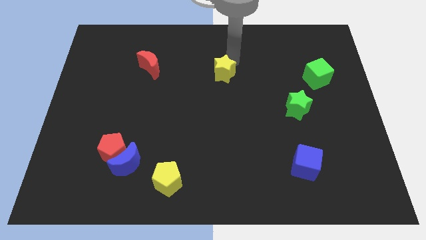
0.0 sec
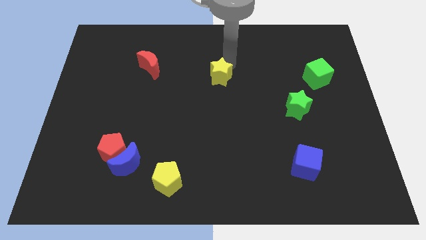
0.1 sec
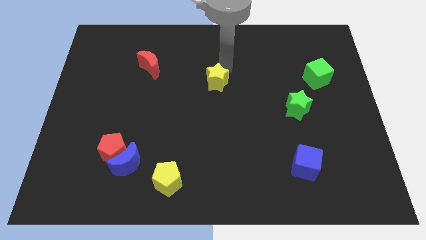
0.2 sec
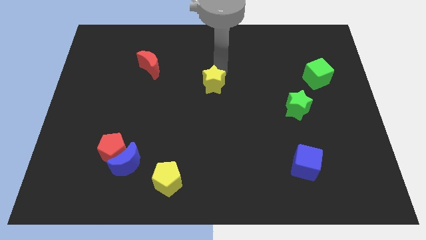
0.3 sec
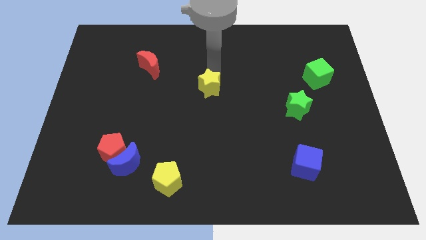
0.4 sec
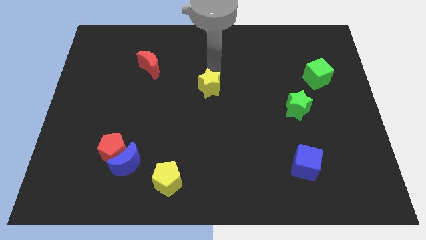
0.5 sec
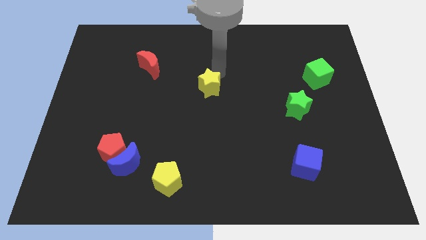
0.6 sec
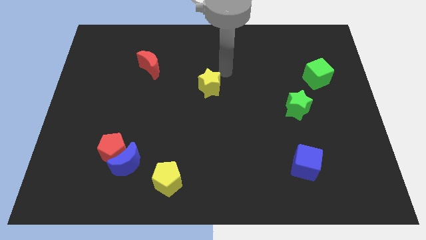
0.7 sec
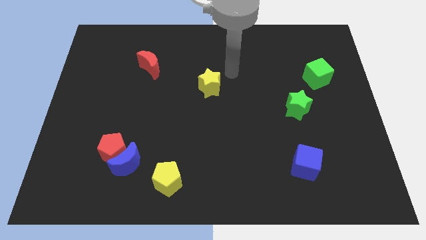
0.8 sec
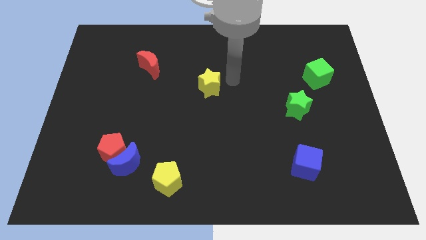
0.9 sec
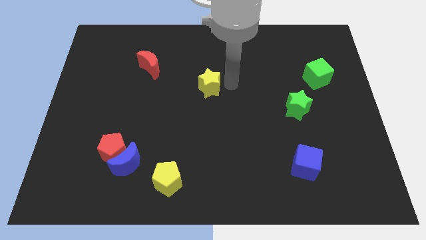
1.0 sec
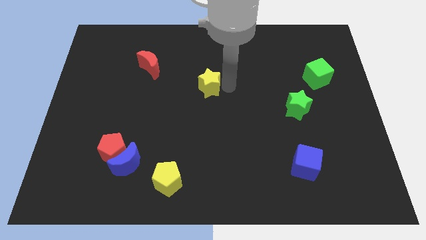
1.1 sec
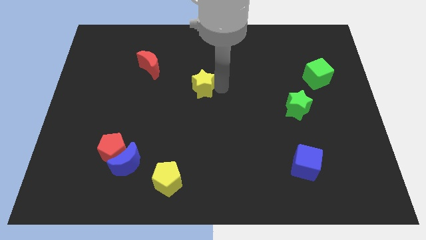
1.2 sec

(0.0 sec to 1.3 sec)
place yellow star to the center of the board

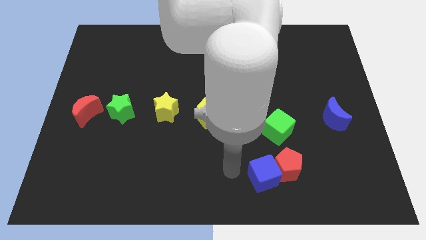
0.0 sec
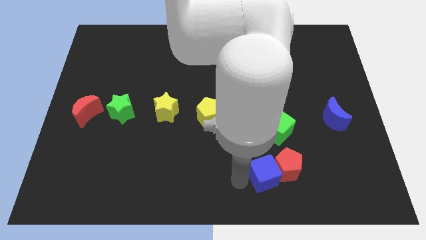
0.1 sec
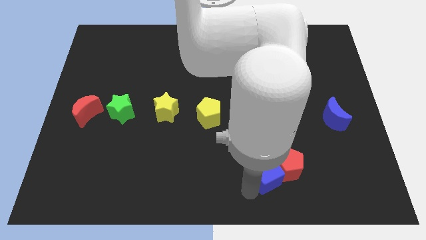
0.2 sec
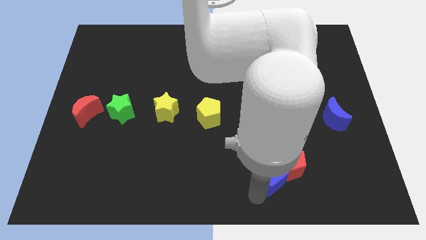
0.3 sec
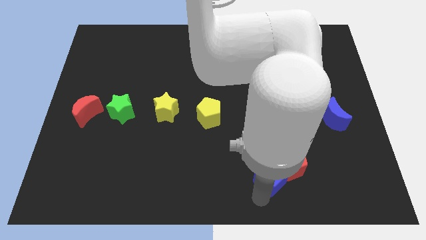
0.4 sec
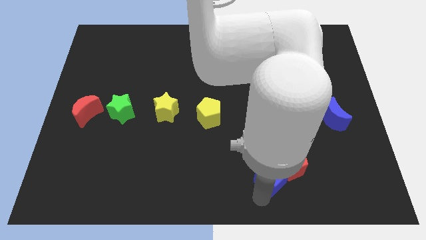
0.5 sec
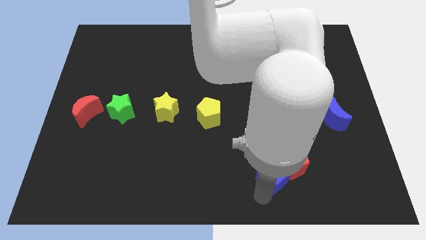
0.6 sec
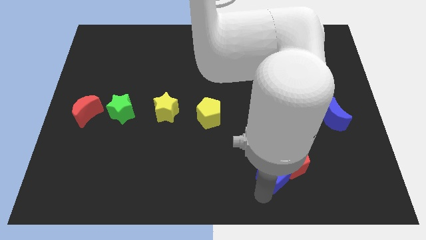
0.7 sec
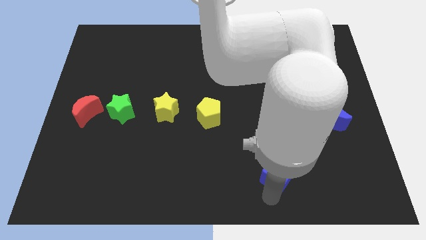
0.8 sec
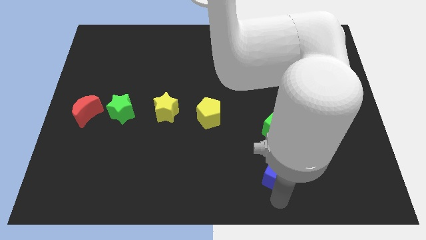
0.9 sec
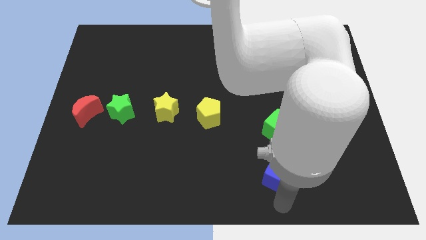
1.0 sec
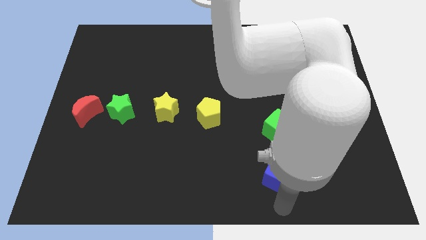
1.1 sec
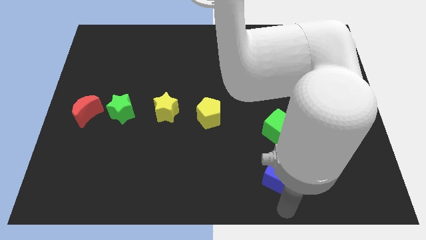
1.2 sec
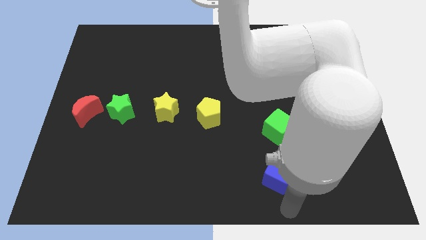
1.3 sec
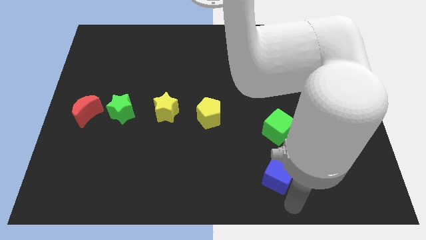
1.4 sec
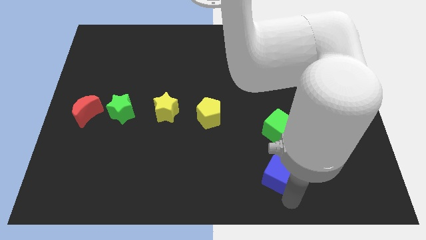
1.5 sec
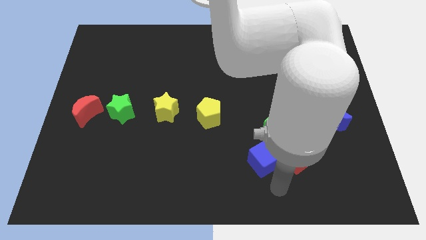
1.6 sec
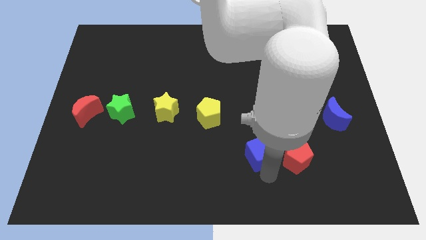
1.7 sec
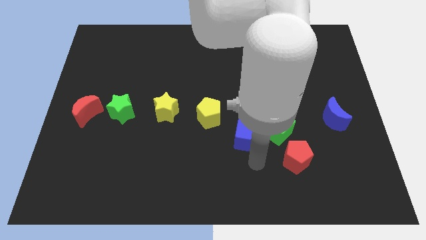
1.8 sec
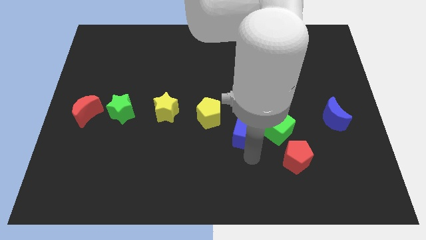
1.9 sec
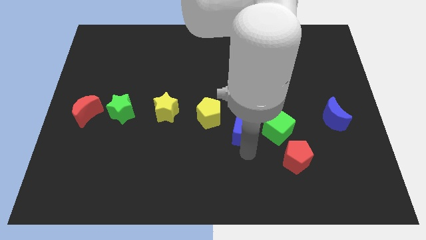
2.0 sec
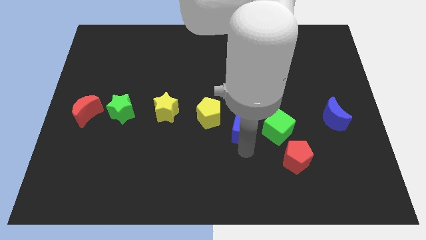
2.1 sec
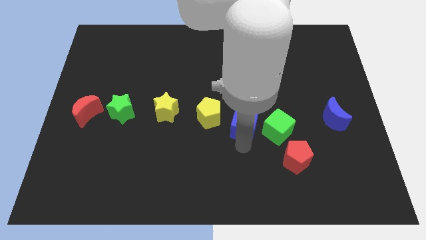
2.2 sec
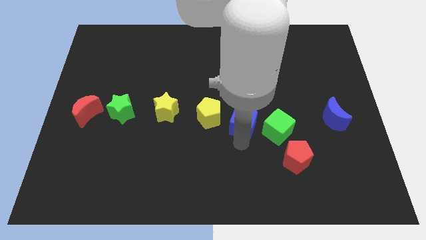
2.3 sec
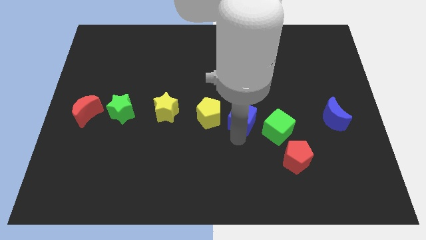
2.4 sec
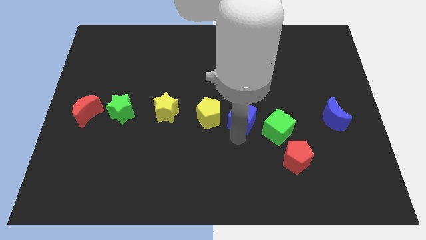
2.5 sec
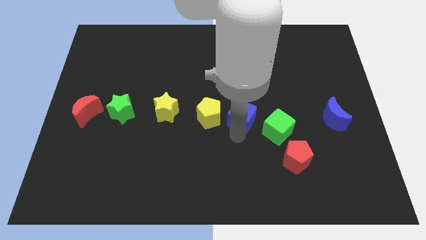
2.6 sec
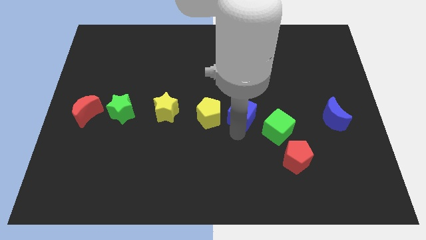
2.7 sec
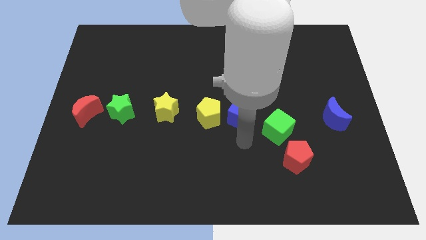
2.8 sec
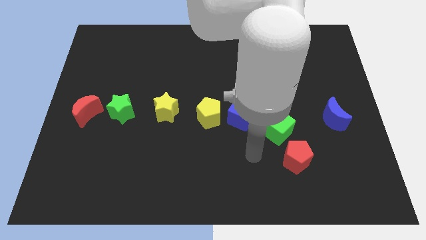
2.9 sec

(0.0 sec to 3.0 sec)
place the blue cube to the left of the yellow pentagon

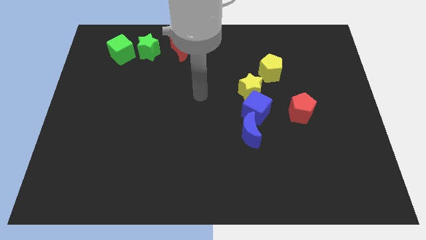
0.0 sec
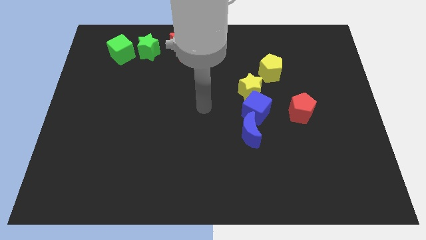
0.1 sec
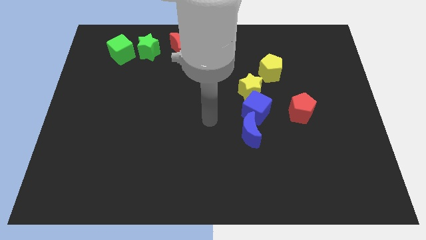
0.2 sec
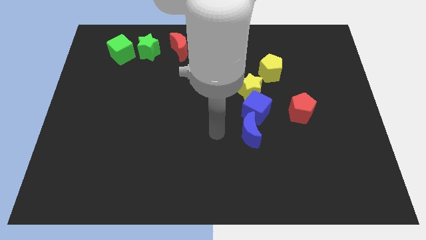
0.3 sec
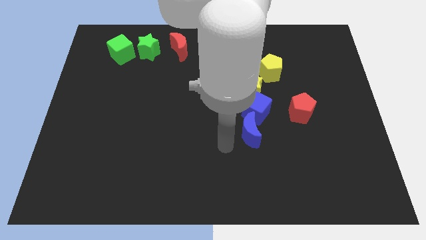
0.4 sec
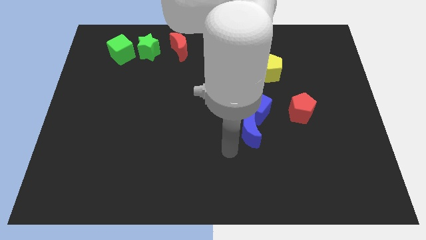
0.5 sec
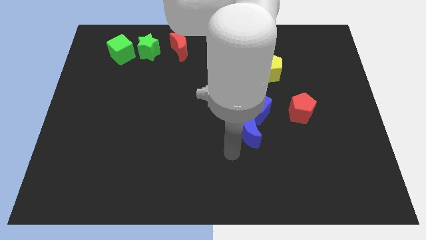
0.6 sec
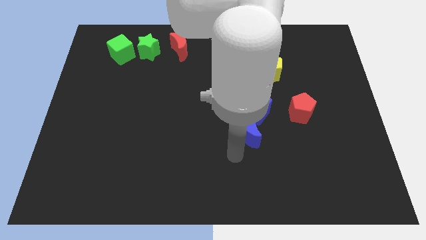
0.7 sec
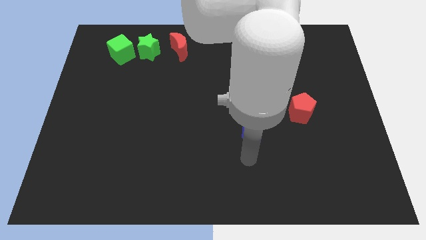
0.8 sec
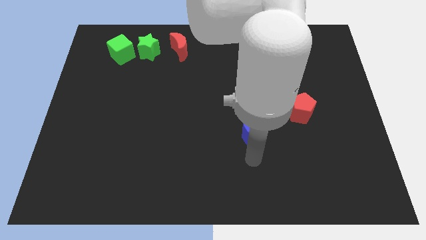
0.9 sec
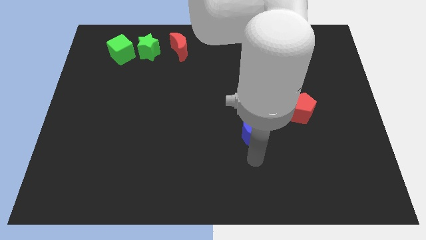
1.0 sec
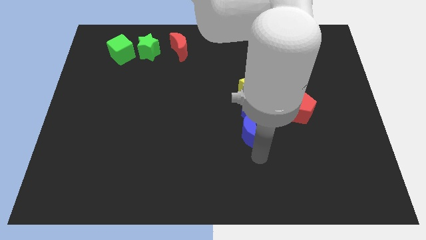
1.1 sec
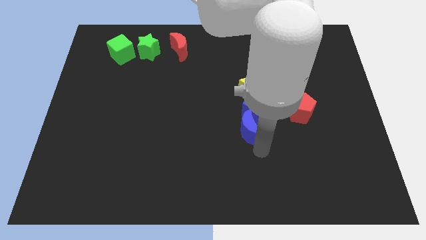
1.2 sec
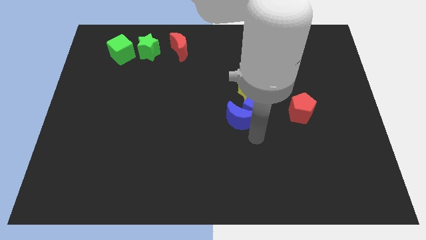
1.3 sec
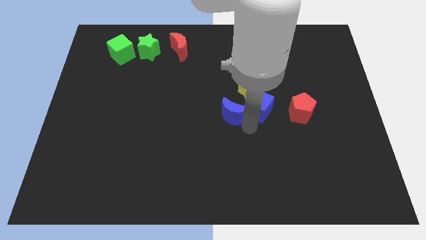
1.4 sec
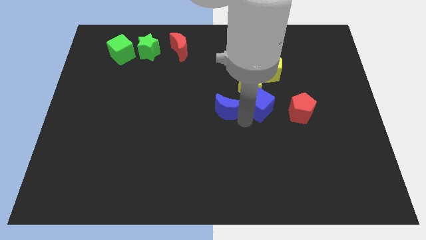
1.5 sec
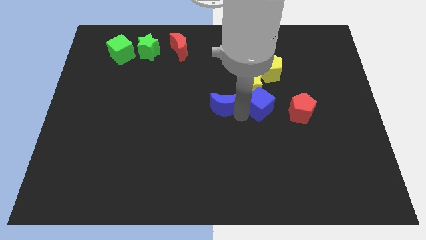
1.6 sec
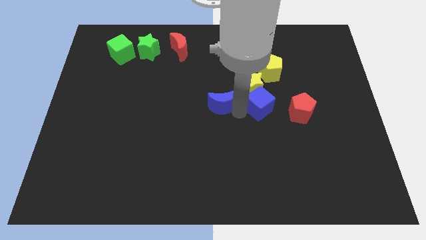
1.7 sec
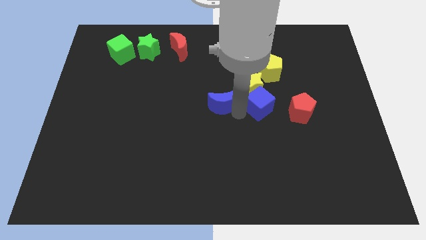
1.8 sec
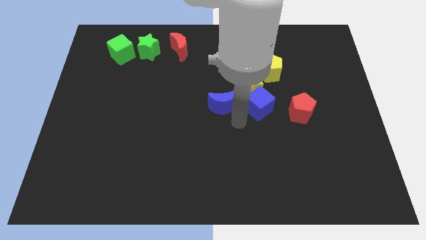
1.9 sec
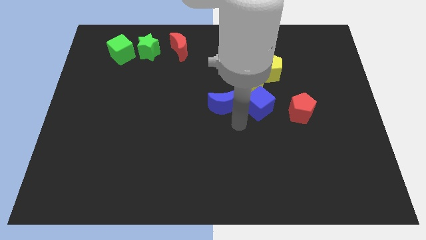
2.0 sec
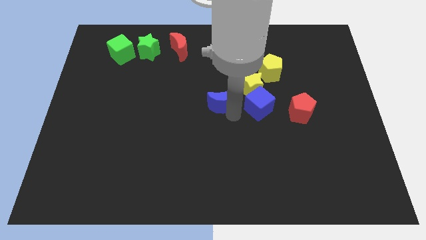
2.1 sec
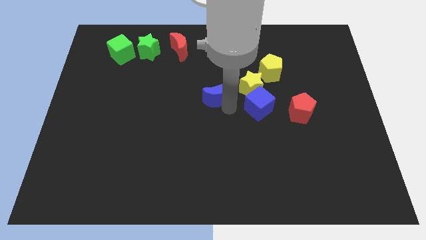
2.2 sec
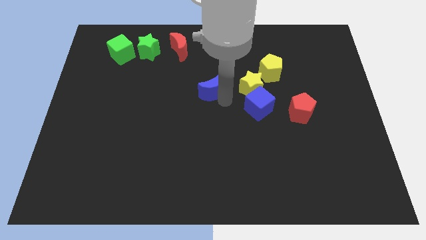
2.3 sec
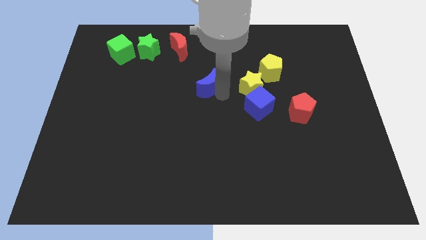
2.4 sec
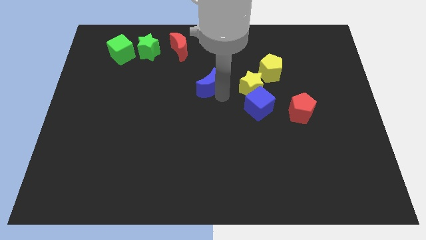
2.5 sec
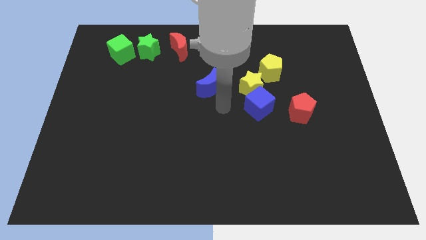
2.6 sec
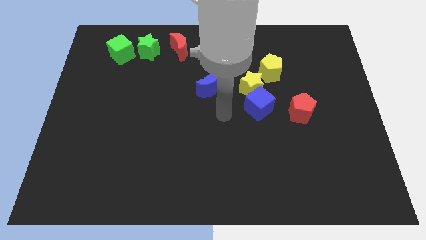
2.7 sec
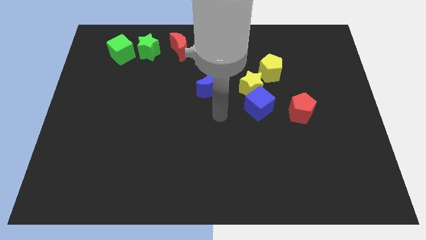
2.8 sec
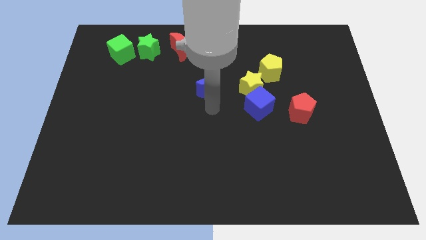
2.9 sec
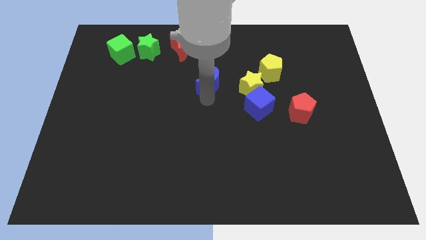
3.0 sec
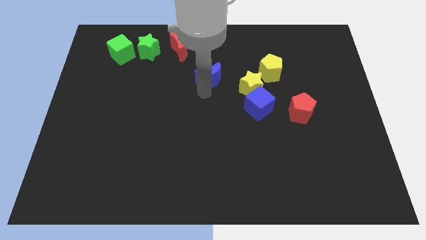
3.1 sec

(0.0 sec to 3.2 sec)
place the blue moon below the red moon

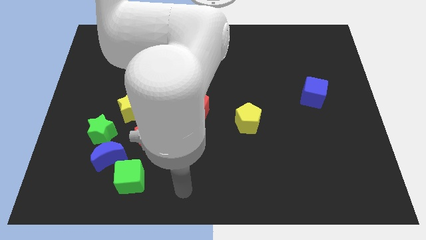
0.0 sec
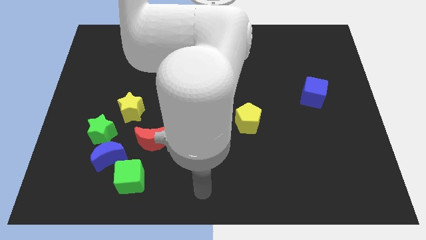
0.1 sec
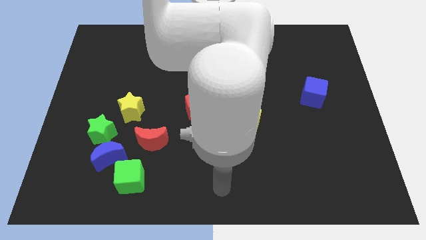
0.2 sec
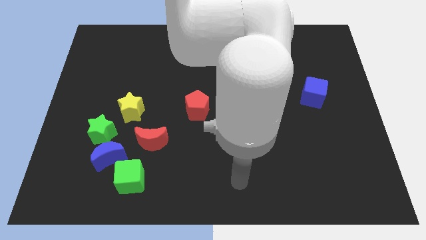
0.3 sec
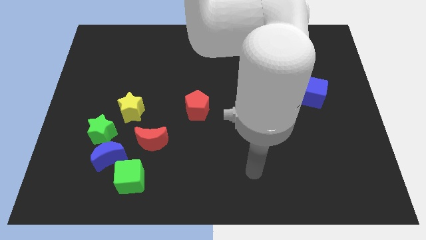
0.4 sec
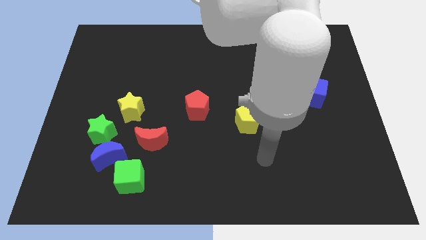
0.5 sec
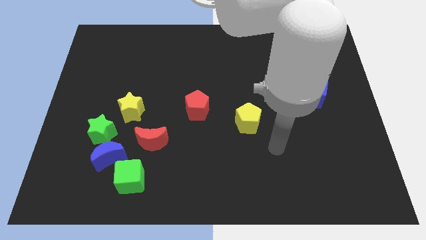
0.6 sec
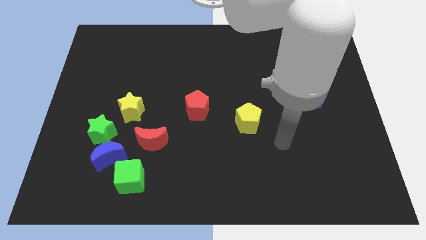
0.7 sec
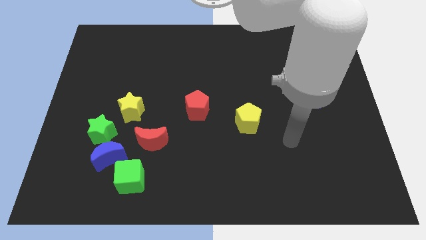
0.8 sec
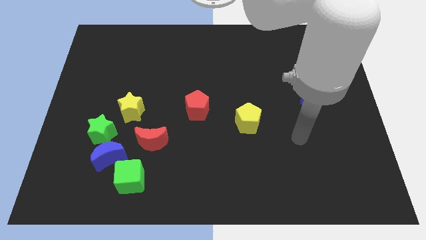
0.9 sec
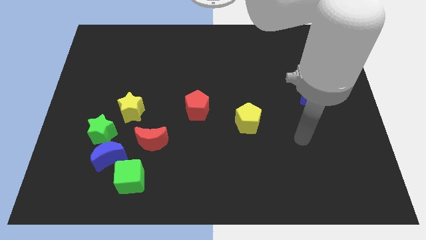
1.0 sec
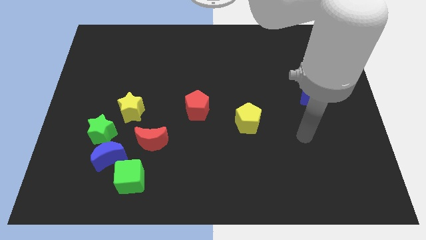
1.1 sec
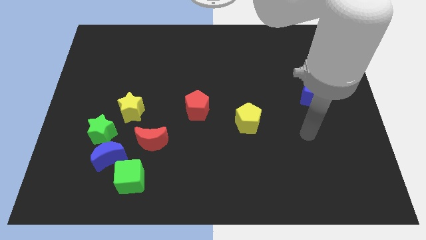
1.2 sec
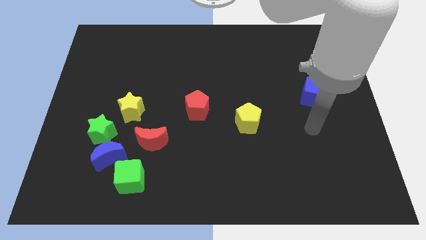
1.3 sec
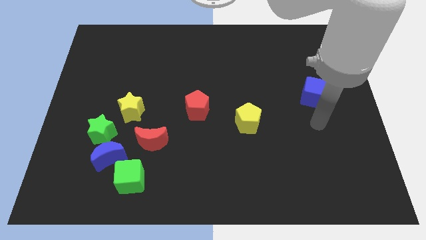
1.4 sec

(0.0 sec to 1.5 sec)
move your arm to the bottom of the blue cube

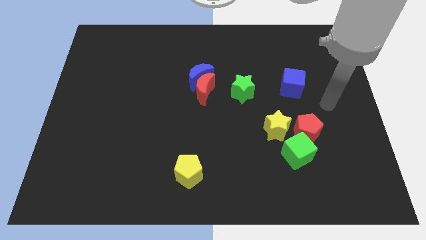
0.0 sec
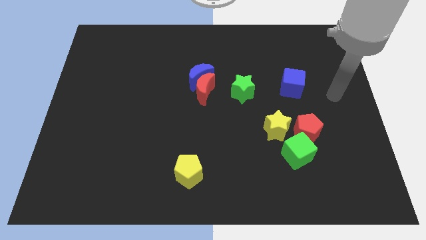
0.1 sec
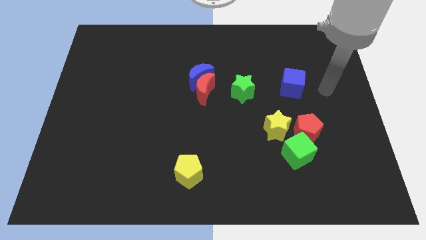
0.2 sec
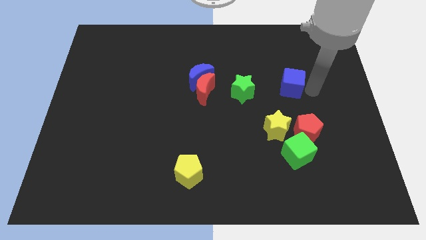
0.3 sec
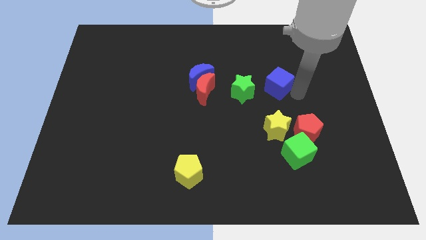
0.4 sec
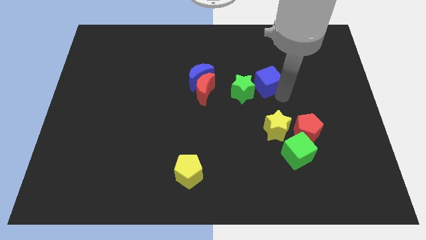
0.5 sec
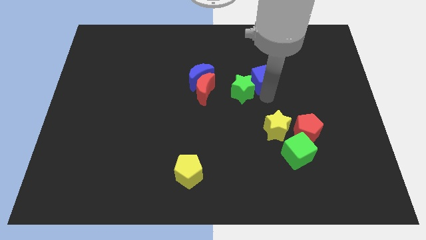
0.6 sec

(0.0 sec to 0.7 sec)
move blue cube beside green star
